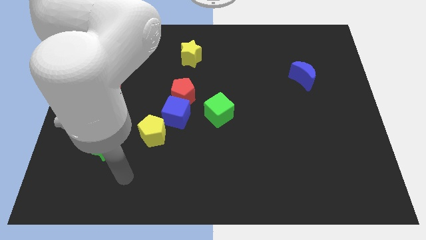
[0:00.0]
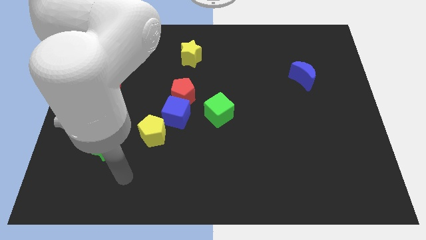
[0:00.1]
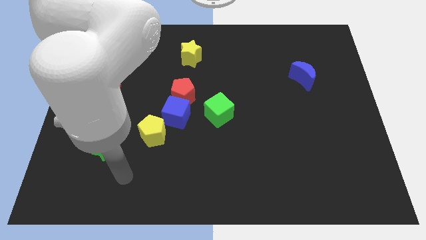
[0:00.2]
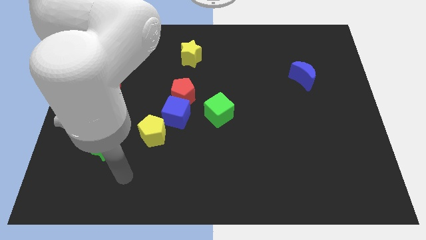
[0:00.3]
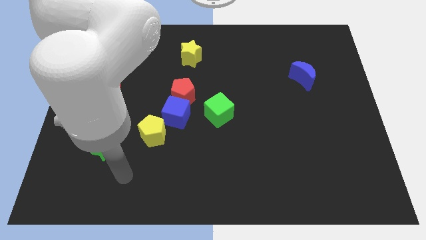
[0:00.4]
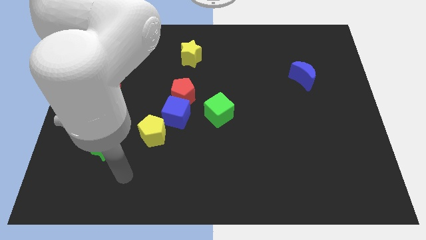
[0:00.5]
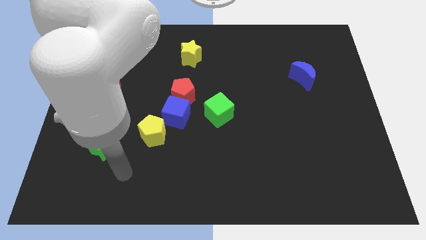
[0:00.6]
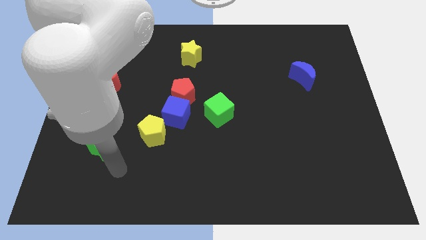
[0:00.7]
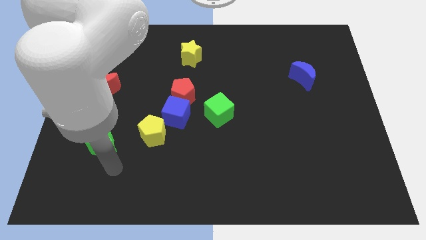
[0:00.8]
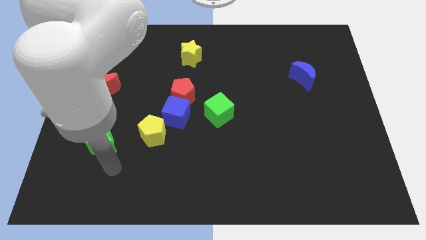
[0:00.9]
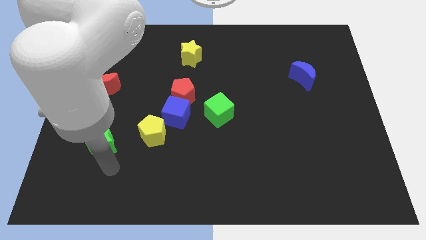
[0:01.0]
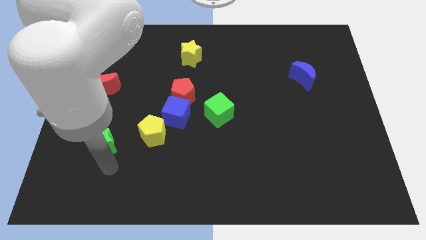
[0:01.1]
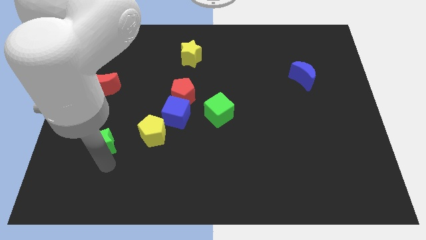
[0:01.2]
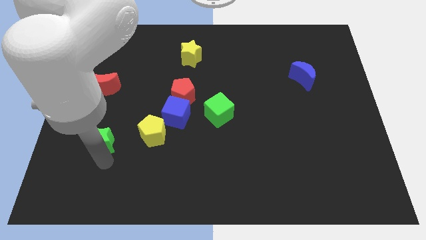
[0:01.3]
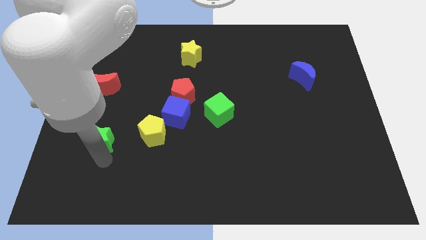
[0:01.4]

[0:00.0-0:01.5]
point your arm below green star

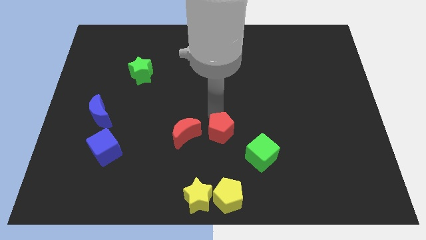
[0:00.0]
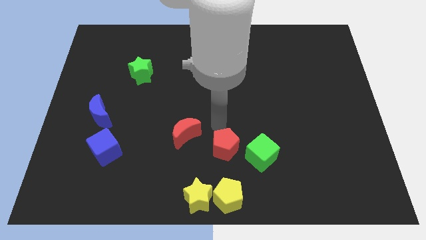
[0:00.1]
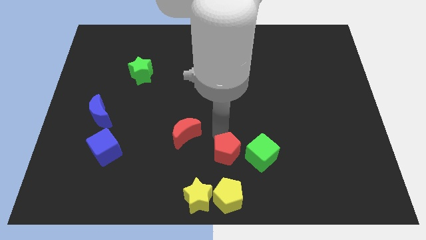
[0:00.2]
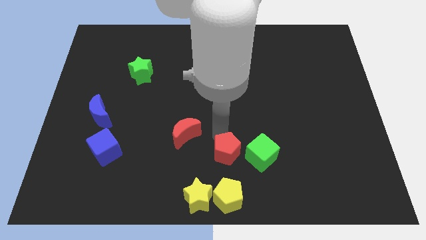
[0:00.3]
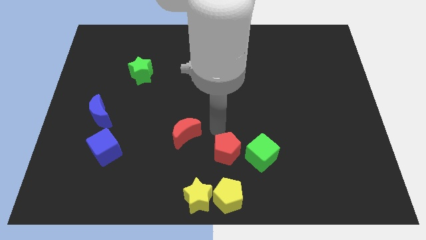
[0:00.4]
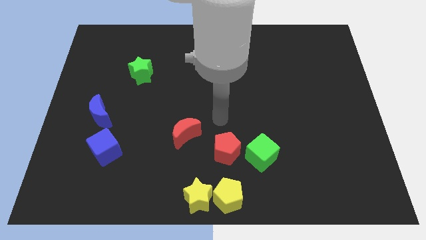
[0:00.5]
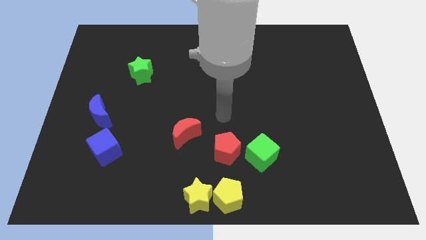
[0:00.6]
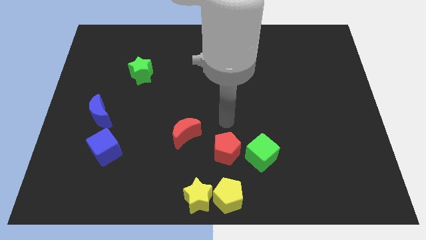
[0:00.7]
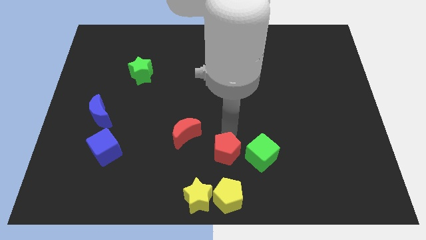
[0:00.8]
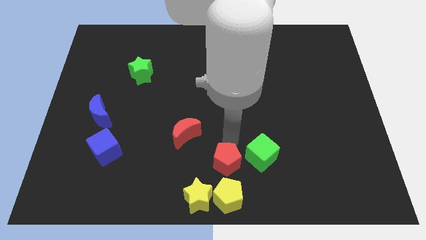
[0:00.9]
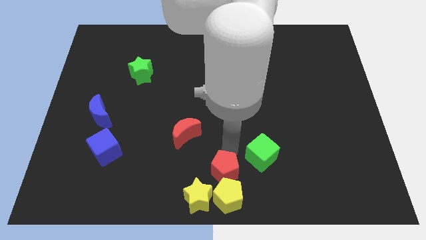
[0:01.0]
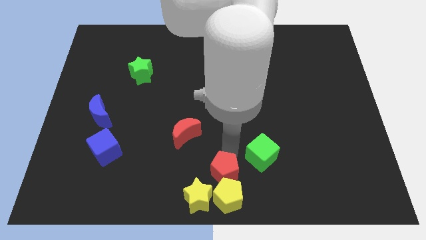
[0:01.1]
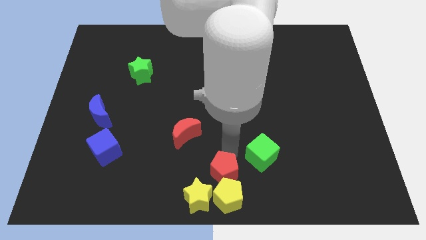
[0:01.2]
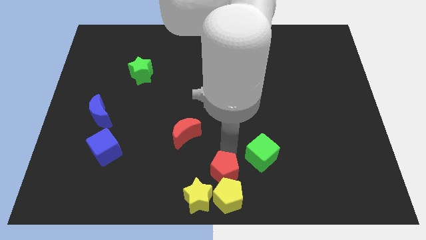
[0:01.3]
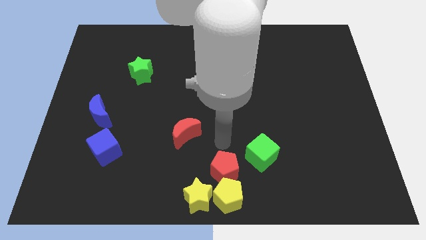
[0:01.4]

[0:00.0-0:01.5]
push the red pentagon to the top side of the yellow pentagon

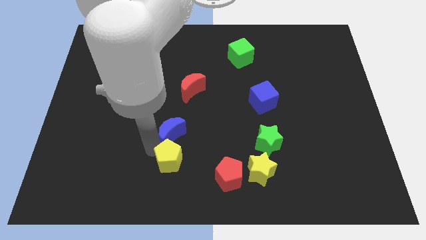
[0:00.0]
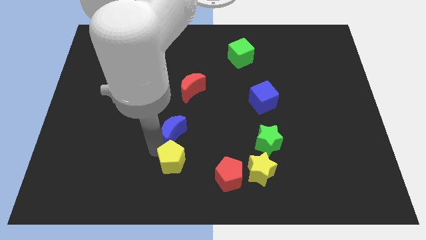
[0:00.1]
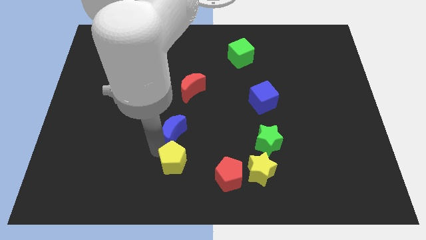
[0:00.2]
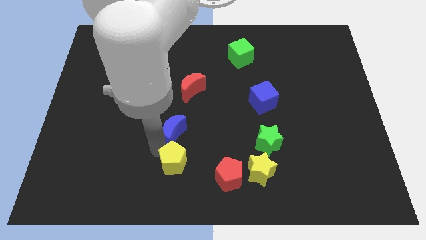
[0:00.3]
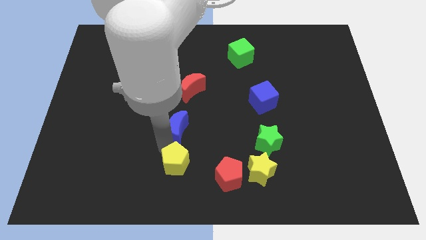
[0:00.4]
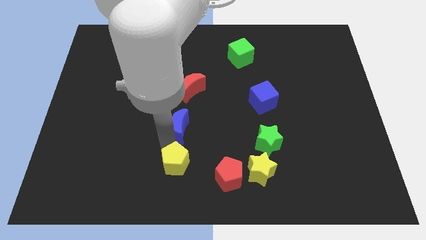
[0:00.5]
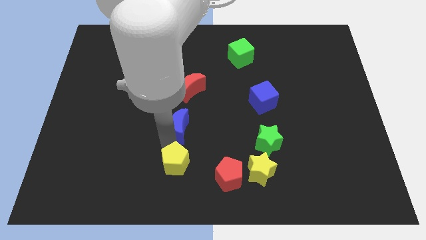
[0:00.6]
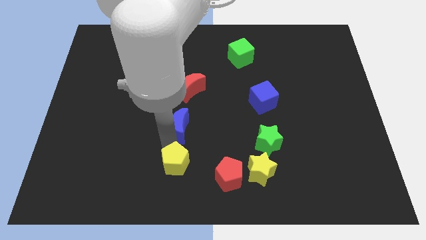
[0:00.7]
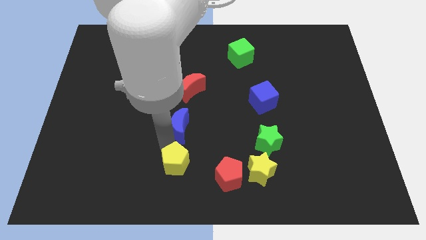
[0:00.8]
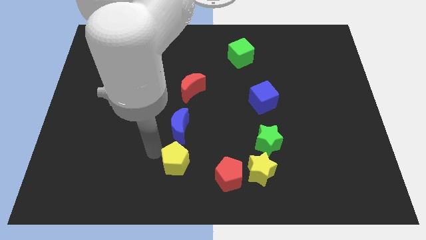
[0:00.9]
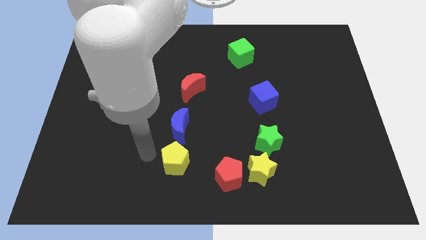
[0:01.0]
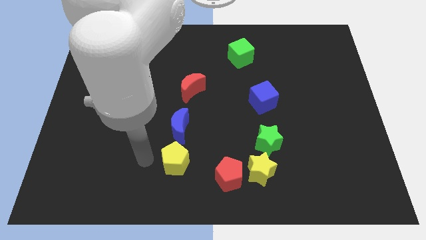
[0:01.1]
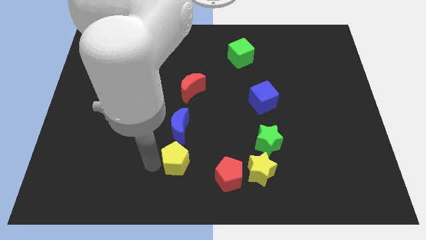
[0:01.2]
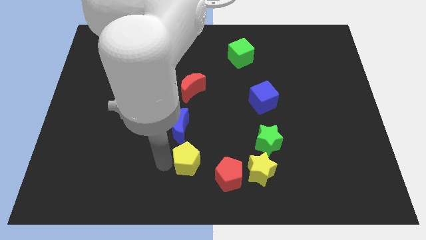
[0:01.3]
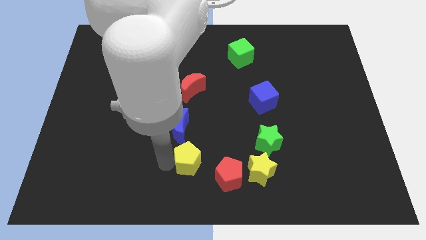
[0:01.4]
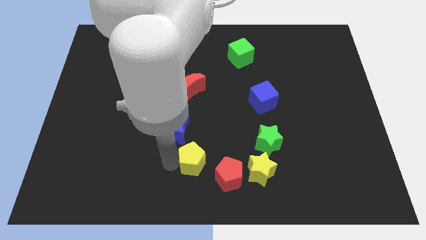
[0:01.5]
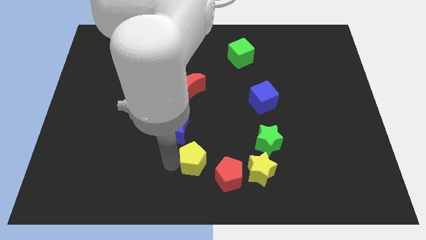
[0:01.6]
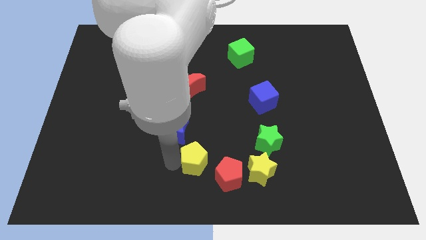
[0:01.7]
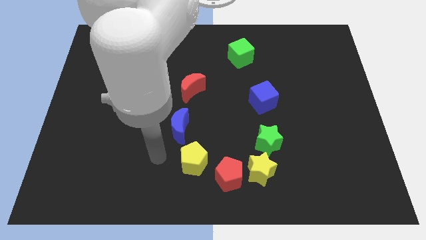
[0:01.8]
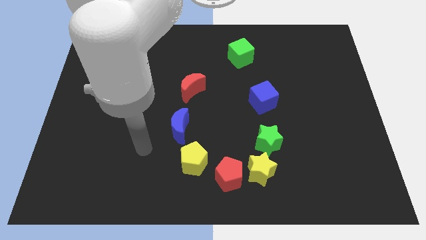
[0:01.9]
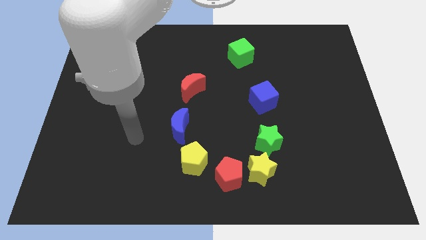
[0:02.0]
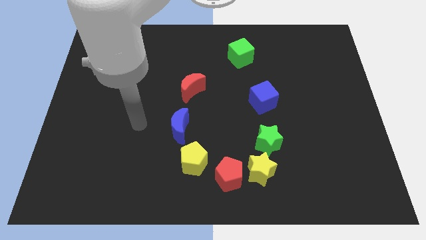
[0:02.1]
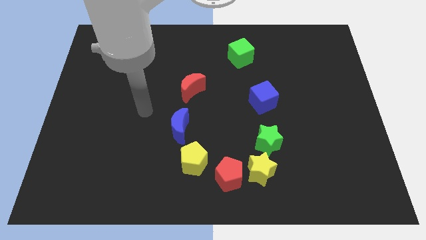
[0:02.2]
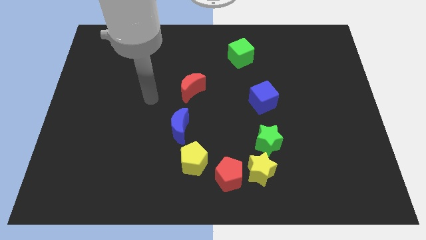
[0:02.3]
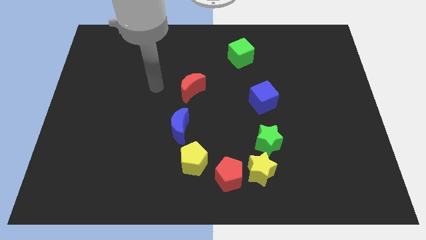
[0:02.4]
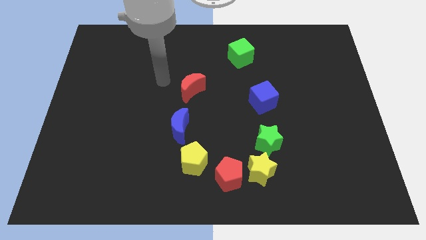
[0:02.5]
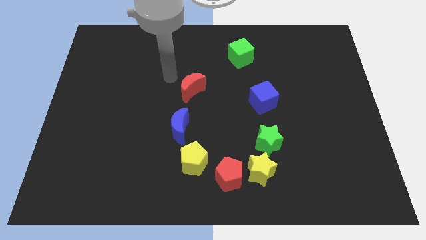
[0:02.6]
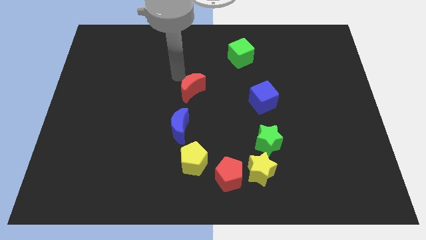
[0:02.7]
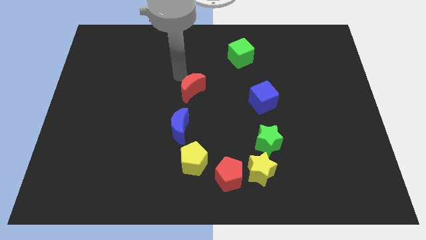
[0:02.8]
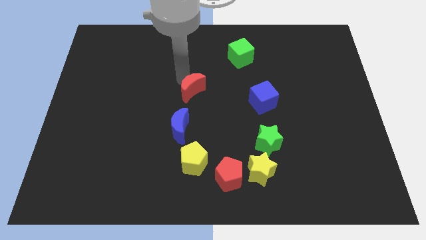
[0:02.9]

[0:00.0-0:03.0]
separate the blue moon and yellow pentagon from each other

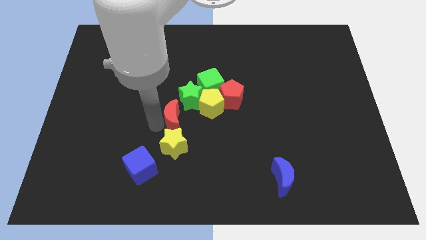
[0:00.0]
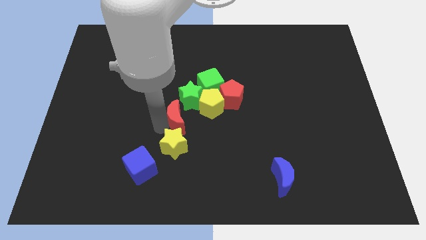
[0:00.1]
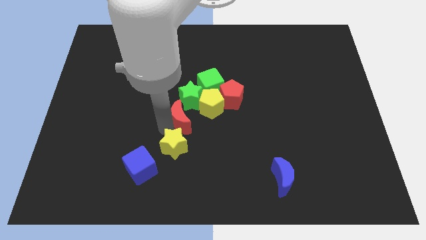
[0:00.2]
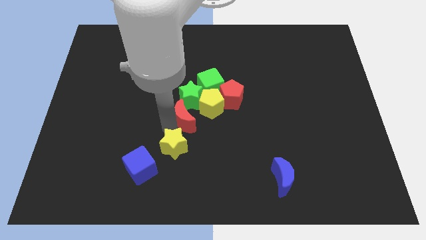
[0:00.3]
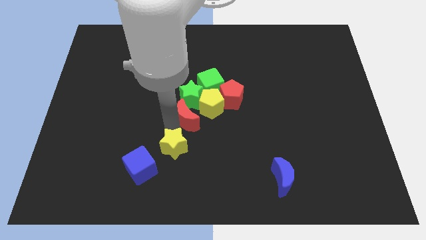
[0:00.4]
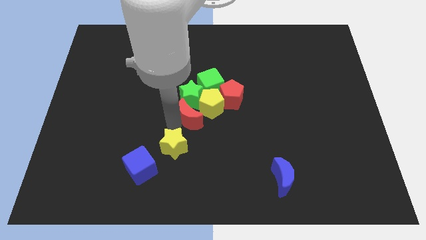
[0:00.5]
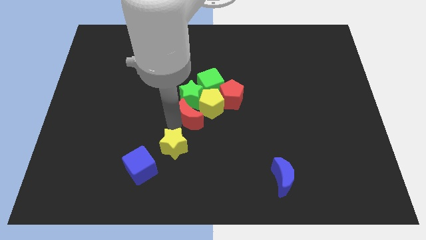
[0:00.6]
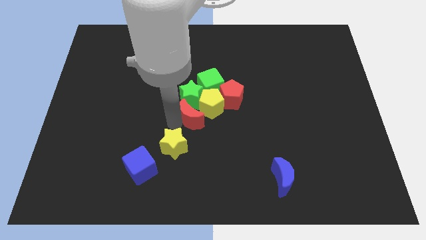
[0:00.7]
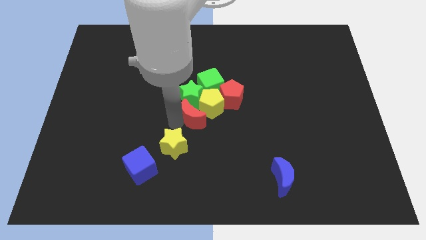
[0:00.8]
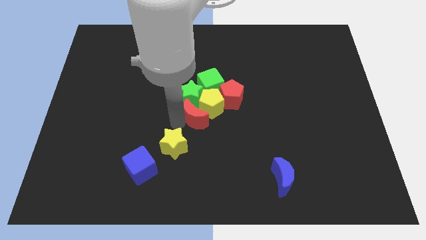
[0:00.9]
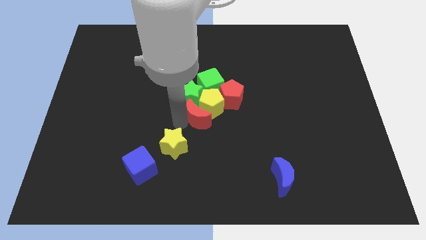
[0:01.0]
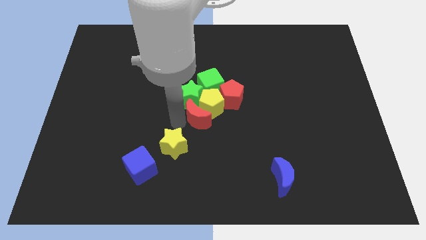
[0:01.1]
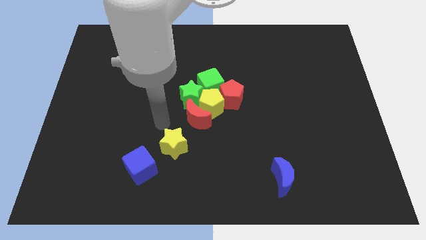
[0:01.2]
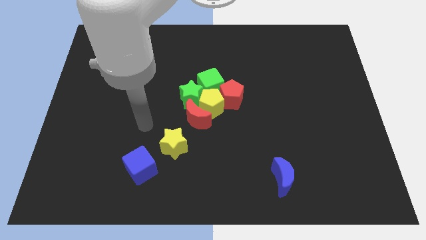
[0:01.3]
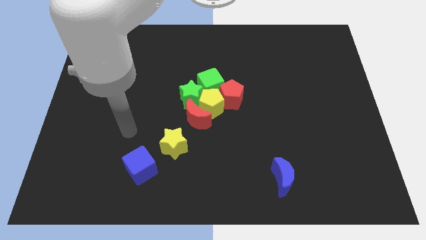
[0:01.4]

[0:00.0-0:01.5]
move the red moon to the bottom of the yellow pentagon

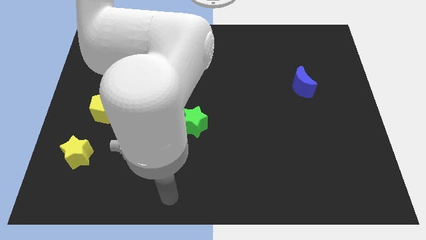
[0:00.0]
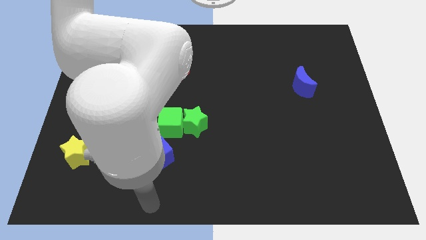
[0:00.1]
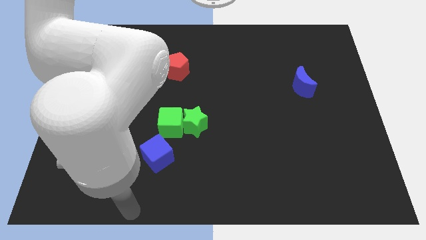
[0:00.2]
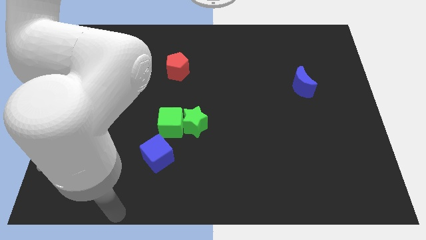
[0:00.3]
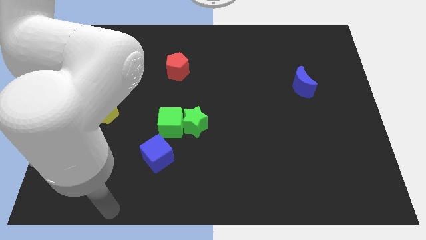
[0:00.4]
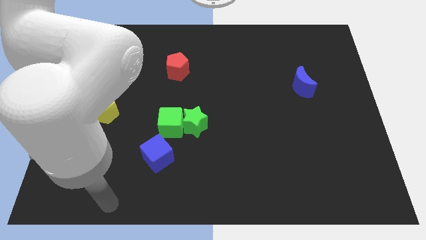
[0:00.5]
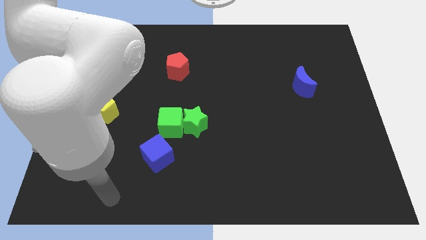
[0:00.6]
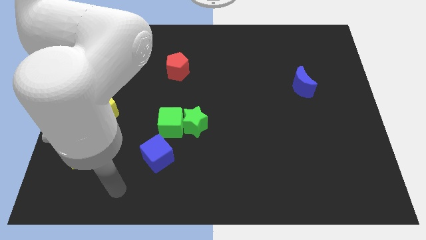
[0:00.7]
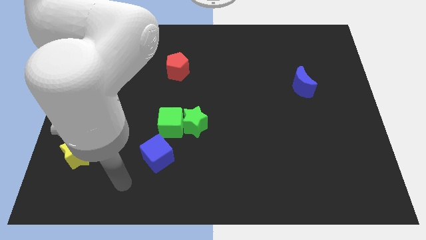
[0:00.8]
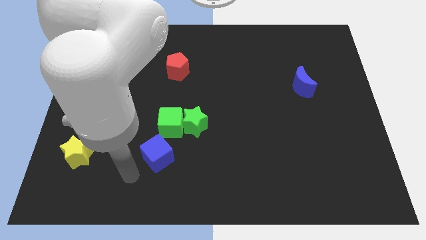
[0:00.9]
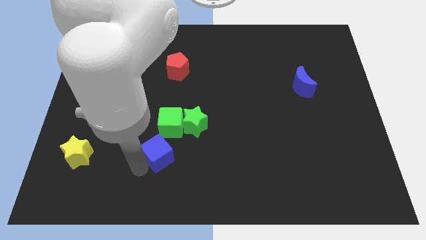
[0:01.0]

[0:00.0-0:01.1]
touch the bottom of blue cube

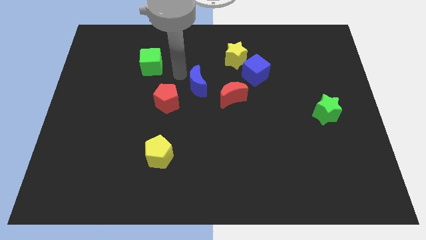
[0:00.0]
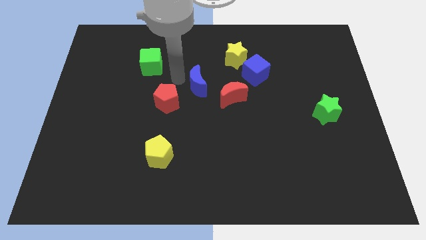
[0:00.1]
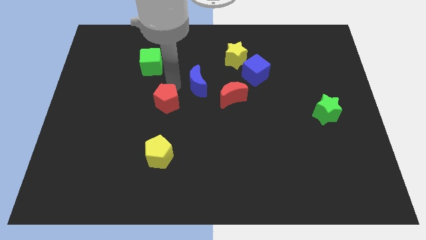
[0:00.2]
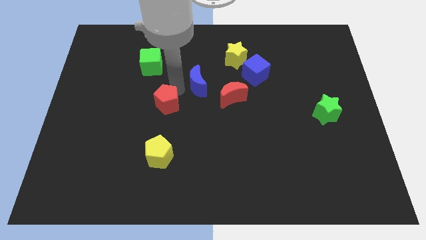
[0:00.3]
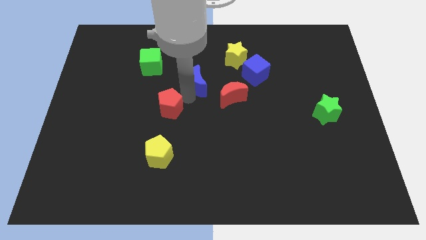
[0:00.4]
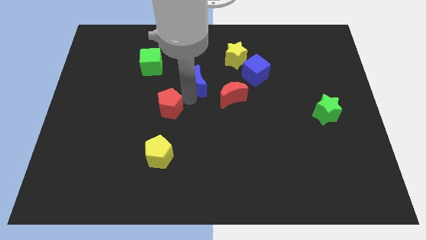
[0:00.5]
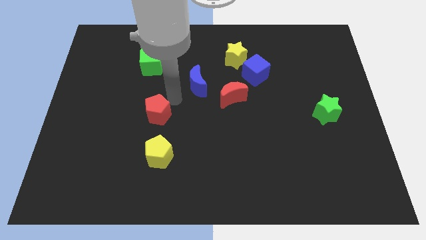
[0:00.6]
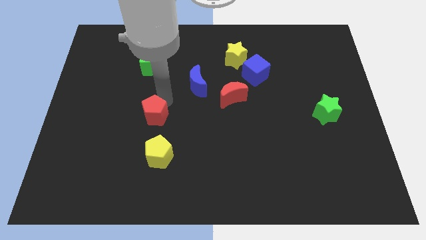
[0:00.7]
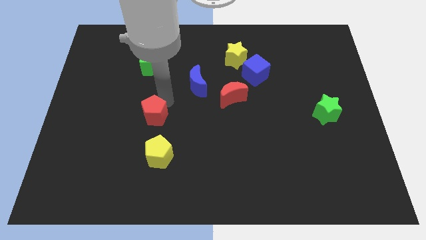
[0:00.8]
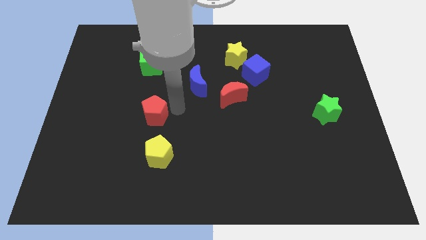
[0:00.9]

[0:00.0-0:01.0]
move red pentagon below the yellow pentagon
